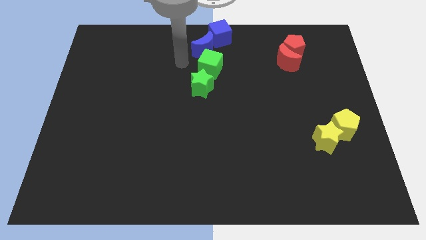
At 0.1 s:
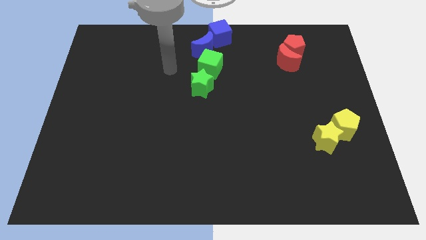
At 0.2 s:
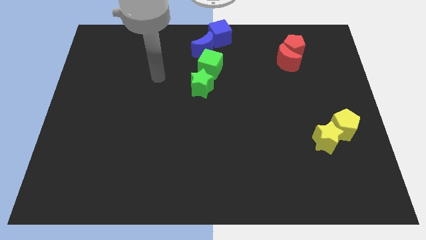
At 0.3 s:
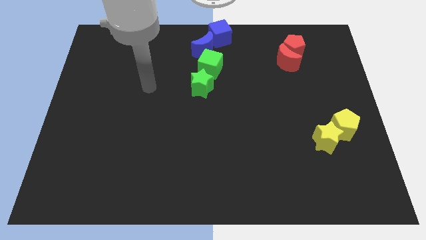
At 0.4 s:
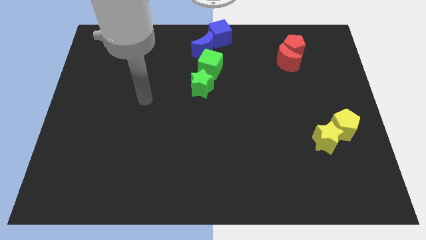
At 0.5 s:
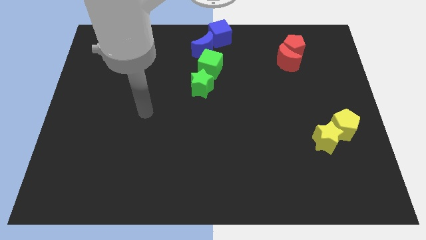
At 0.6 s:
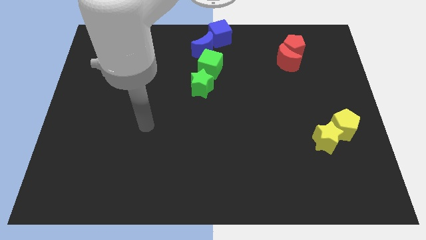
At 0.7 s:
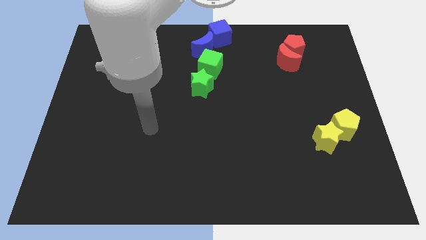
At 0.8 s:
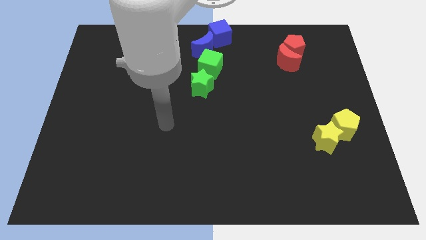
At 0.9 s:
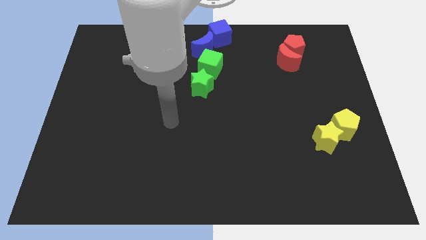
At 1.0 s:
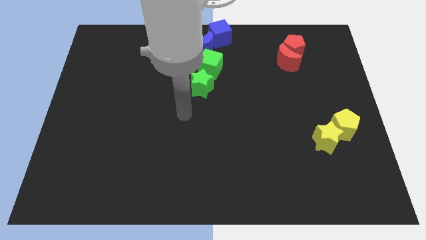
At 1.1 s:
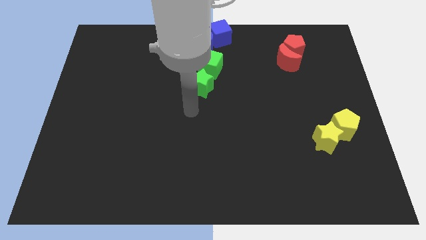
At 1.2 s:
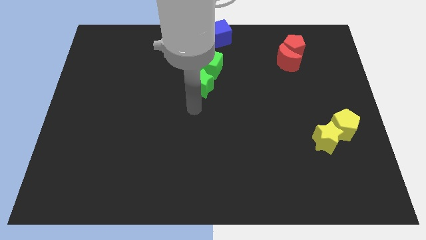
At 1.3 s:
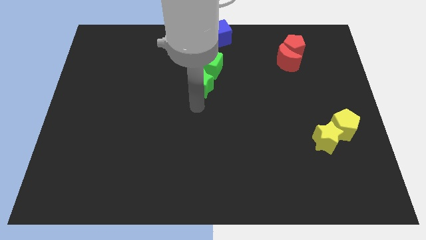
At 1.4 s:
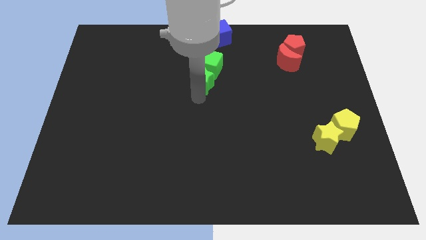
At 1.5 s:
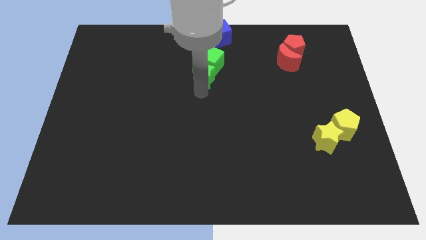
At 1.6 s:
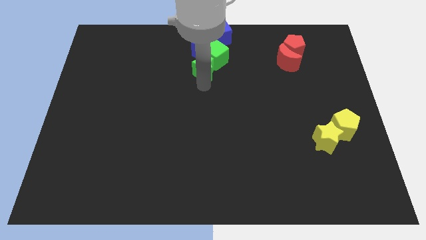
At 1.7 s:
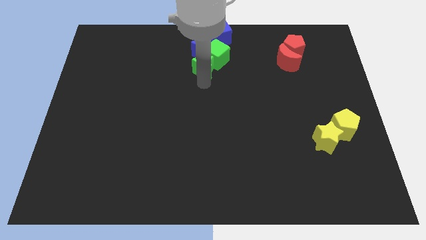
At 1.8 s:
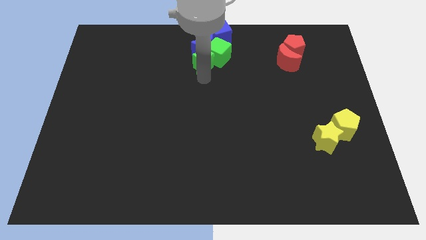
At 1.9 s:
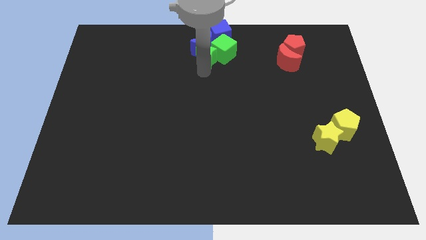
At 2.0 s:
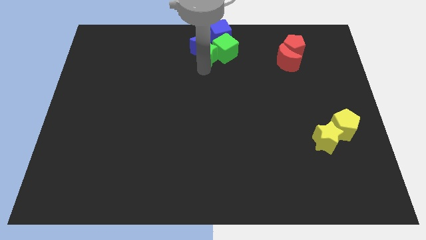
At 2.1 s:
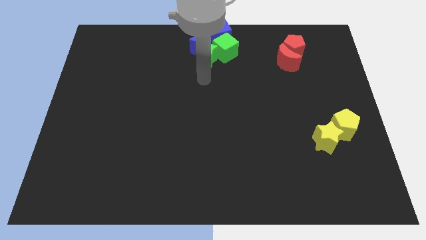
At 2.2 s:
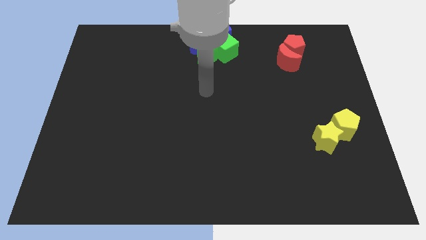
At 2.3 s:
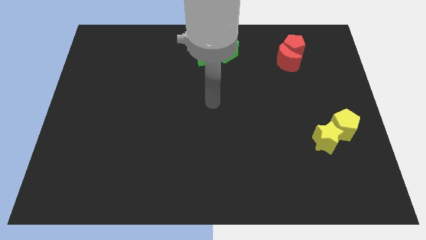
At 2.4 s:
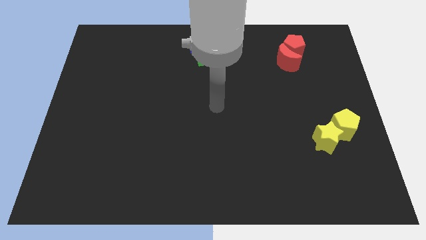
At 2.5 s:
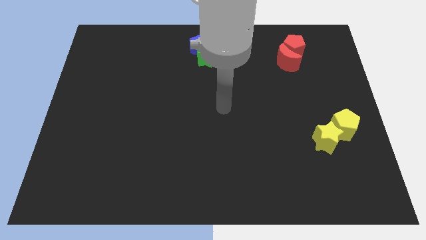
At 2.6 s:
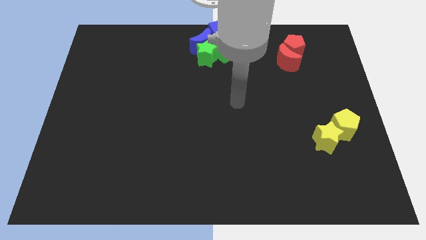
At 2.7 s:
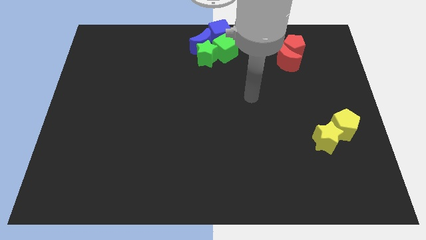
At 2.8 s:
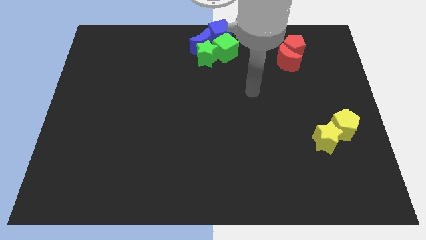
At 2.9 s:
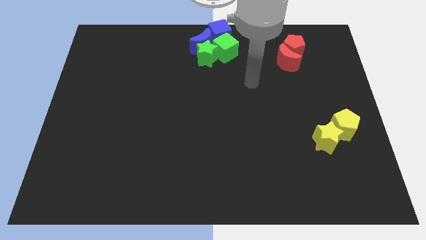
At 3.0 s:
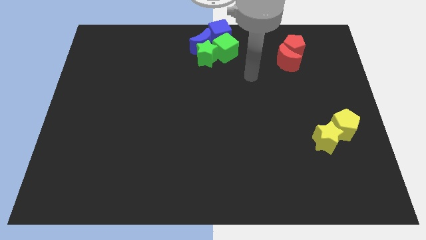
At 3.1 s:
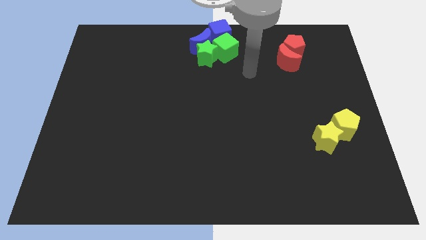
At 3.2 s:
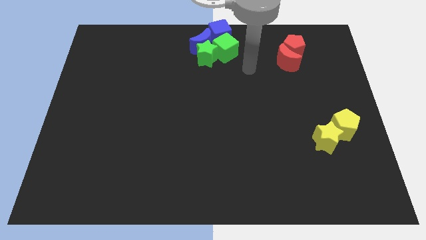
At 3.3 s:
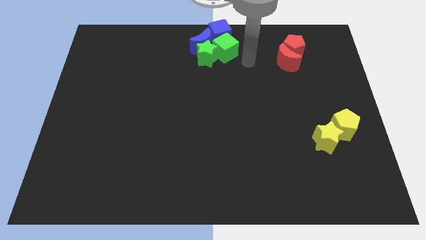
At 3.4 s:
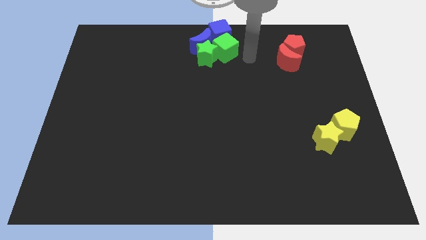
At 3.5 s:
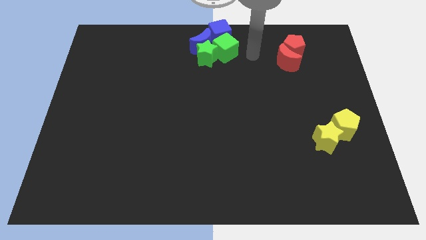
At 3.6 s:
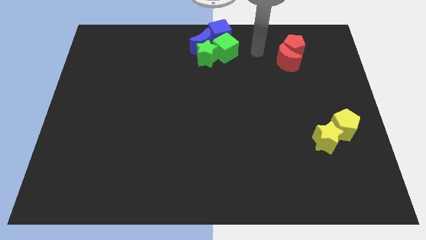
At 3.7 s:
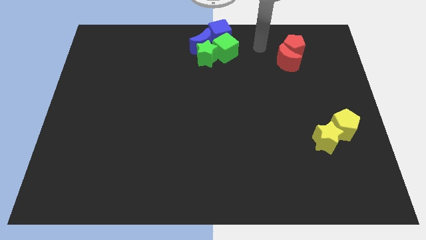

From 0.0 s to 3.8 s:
push the green blocks towards the top

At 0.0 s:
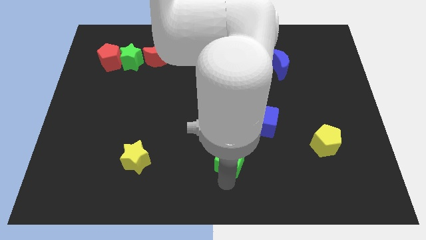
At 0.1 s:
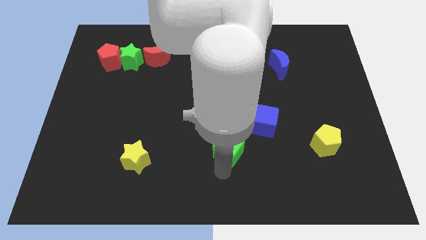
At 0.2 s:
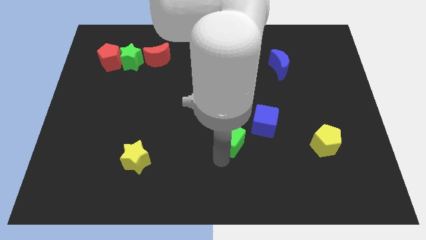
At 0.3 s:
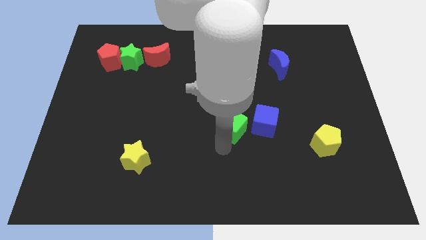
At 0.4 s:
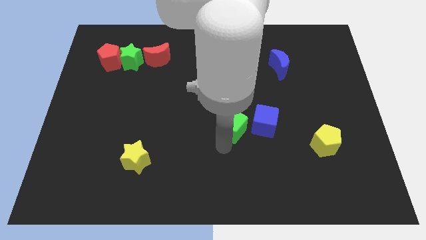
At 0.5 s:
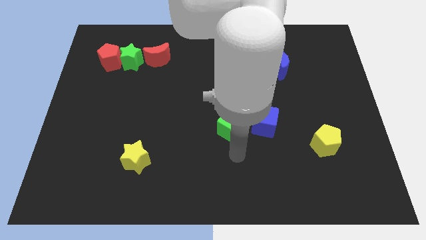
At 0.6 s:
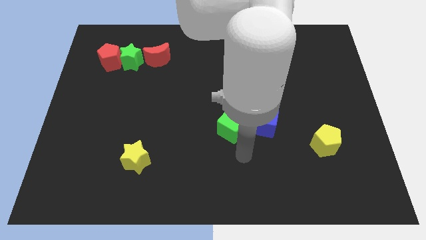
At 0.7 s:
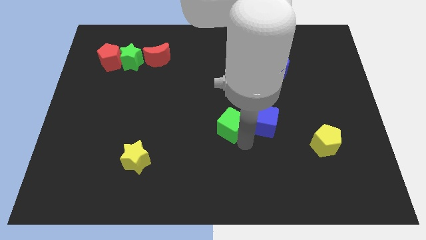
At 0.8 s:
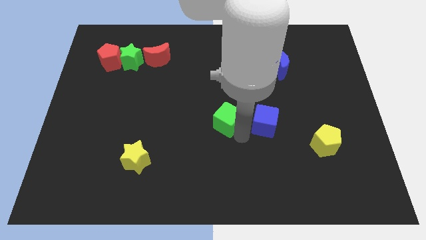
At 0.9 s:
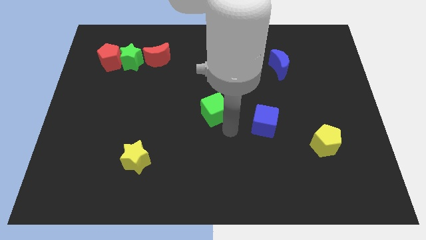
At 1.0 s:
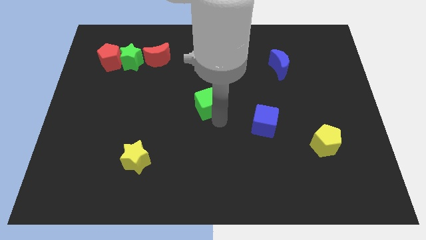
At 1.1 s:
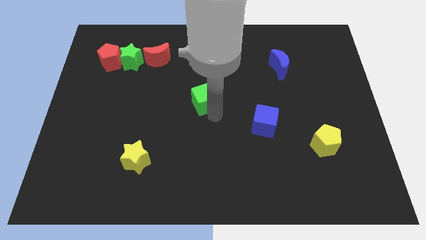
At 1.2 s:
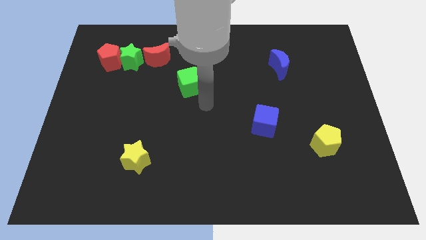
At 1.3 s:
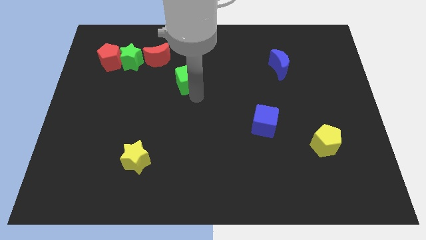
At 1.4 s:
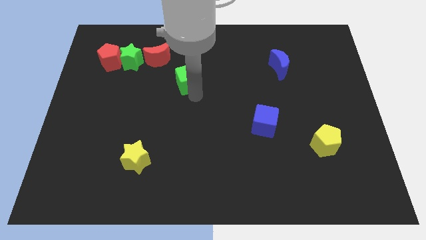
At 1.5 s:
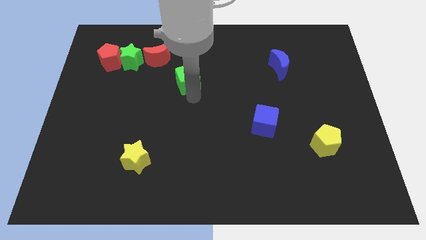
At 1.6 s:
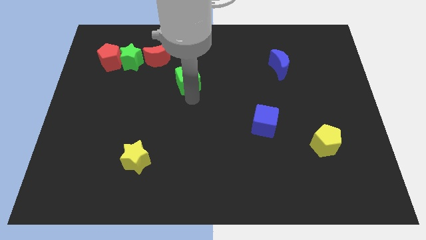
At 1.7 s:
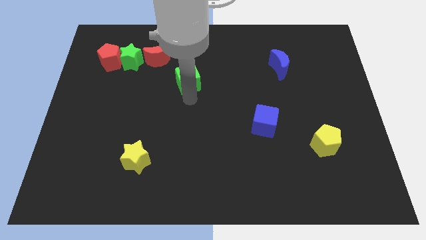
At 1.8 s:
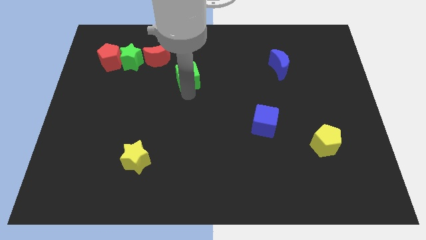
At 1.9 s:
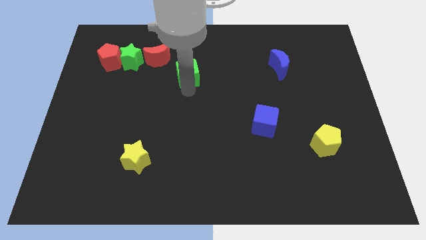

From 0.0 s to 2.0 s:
move the green cube slightly towards the top of the board

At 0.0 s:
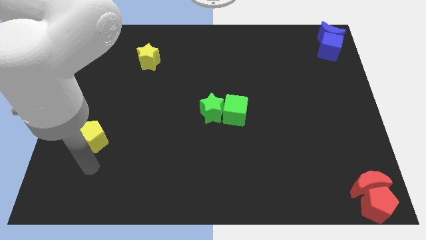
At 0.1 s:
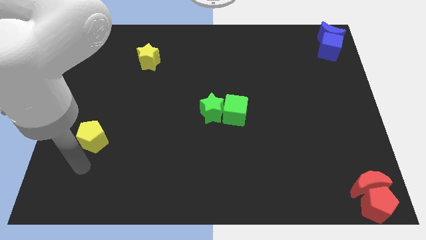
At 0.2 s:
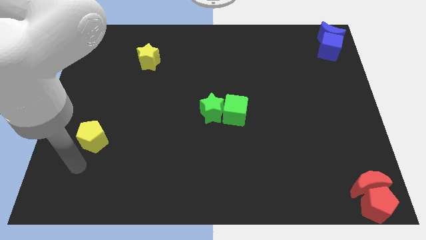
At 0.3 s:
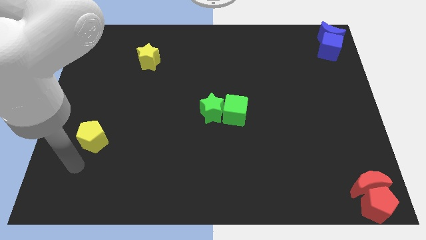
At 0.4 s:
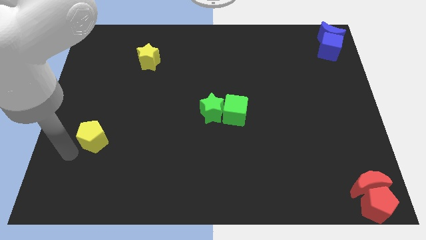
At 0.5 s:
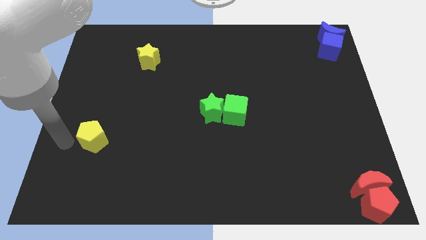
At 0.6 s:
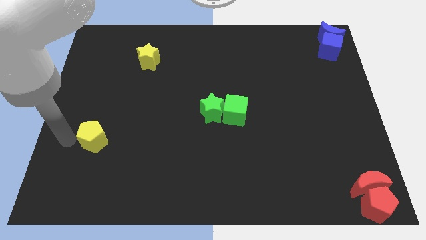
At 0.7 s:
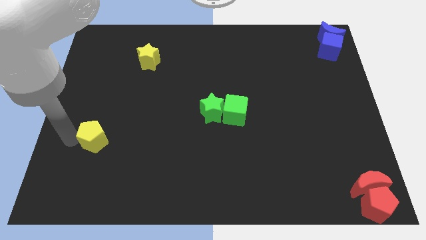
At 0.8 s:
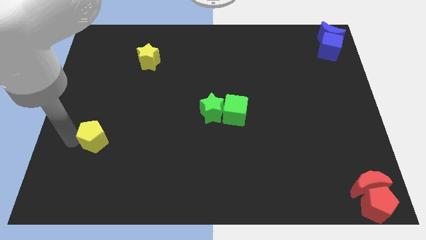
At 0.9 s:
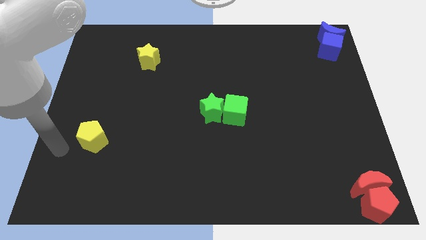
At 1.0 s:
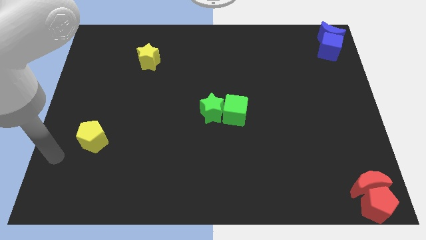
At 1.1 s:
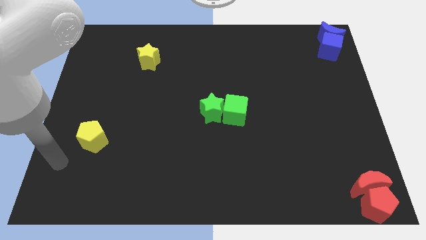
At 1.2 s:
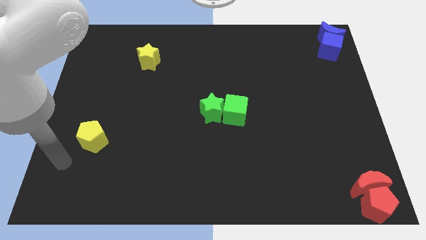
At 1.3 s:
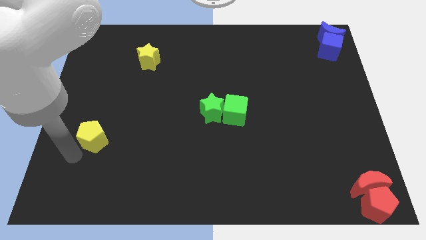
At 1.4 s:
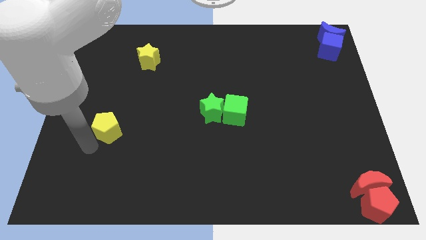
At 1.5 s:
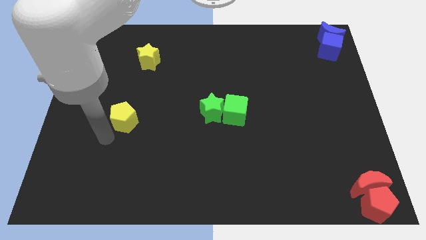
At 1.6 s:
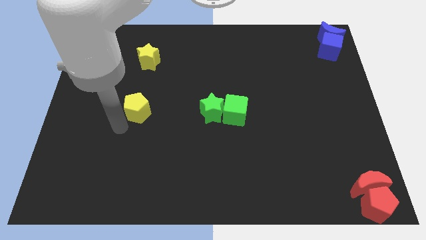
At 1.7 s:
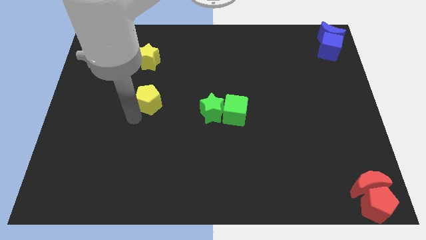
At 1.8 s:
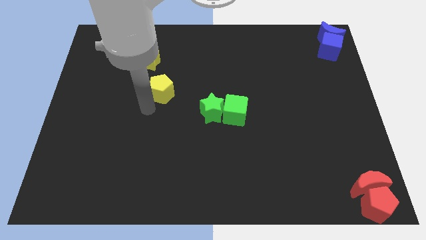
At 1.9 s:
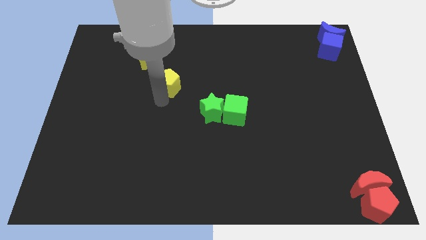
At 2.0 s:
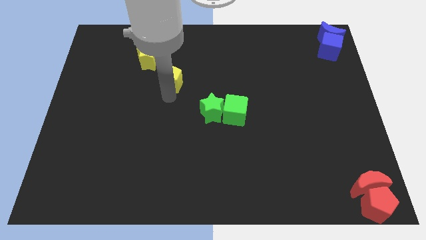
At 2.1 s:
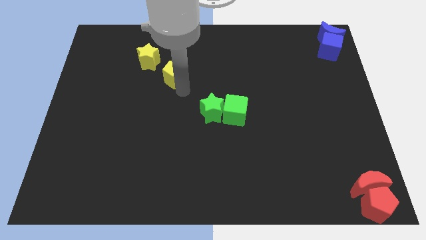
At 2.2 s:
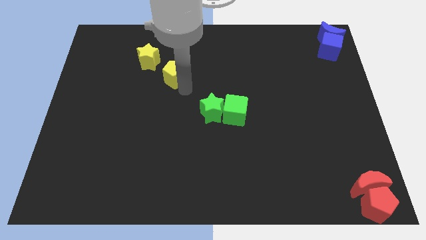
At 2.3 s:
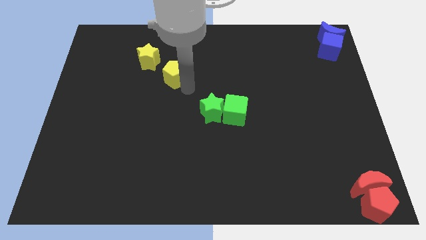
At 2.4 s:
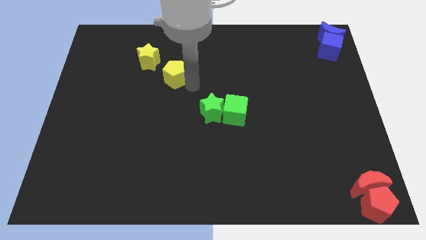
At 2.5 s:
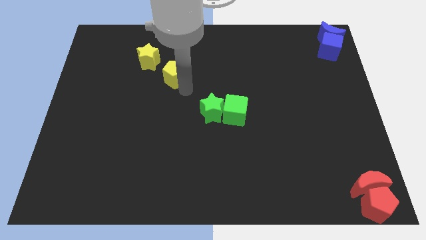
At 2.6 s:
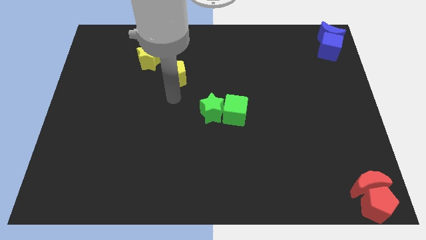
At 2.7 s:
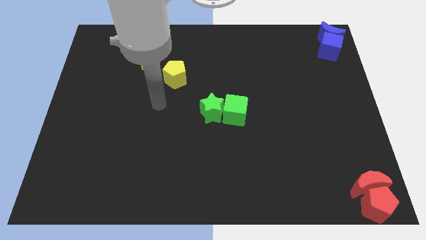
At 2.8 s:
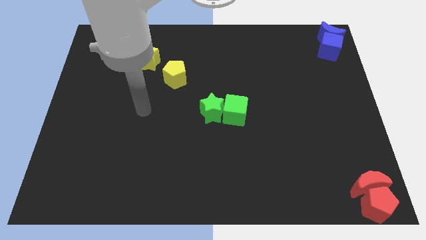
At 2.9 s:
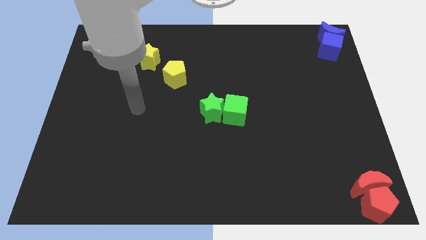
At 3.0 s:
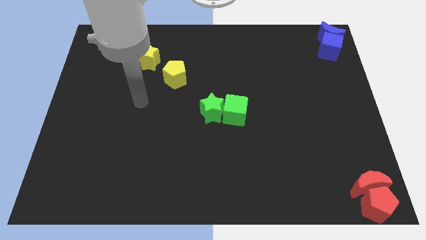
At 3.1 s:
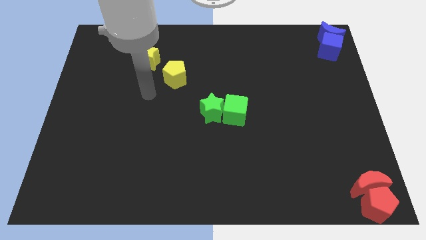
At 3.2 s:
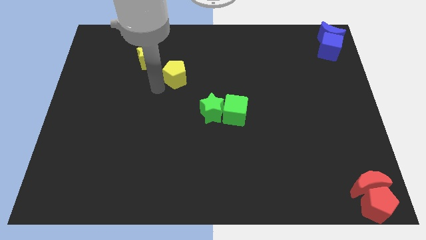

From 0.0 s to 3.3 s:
place the yellow pentagon diagonally to the right of the yellow star
